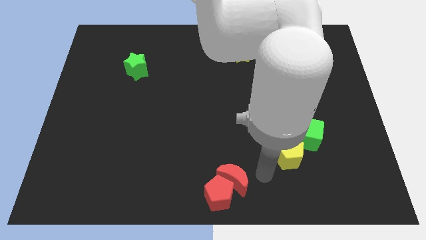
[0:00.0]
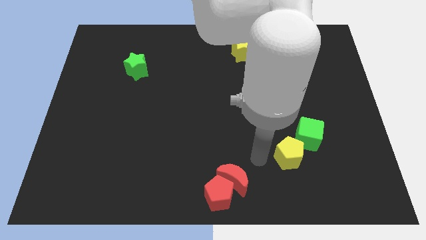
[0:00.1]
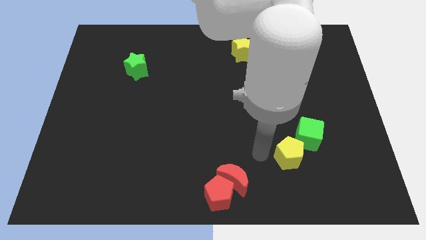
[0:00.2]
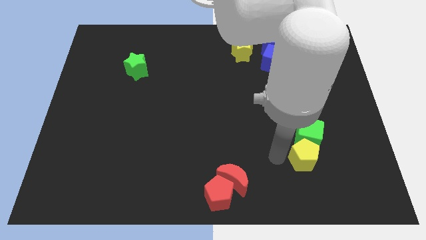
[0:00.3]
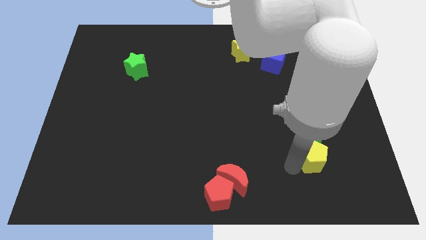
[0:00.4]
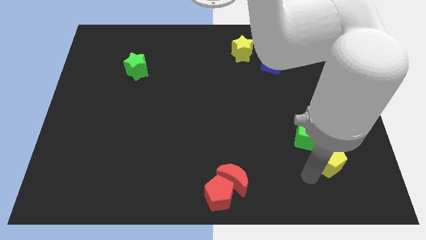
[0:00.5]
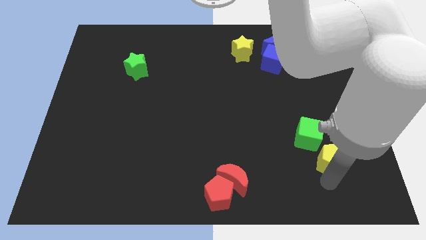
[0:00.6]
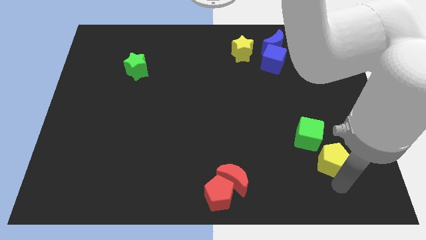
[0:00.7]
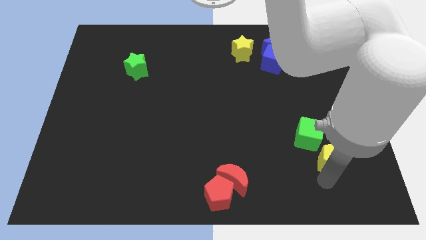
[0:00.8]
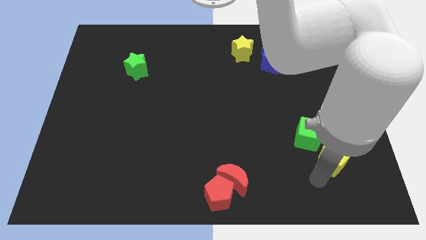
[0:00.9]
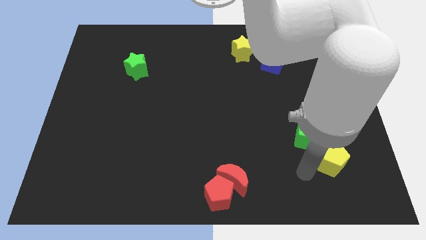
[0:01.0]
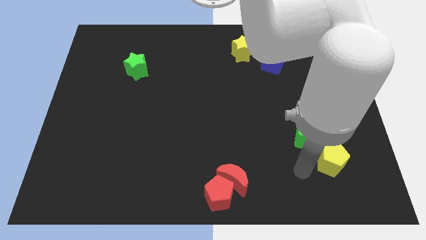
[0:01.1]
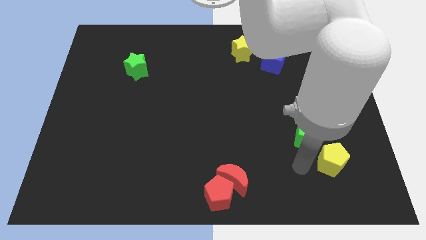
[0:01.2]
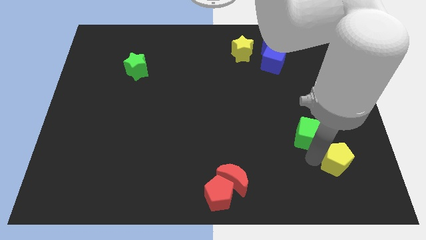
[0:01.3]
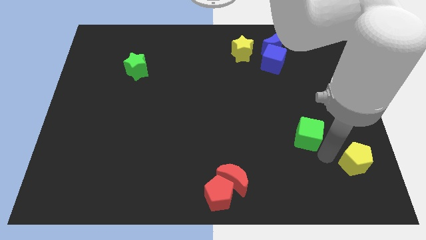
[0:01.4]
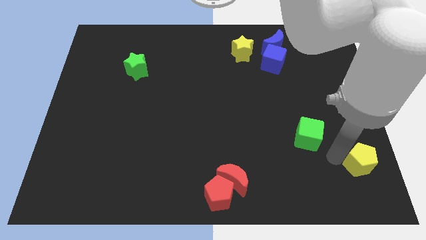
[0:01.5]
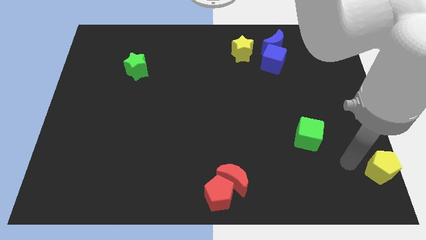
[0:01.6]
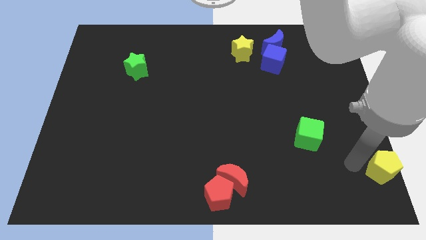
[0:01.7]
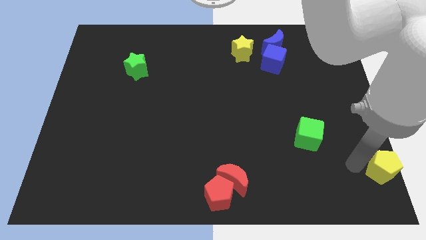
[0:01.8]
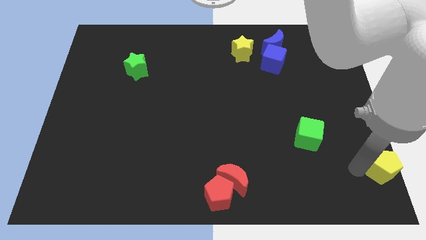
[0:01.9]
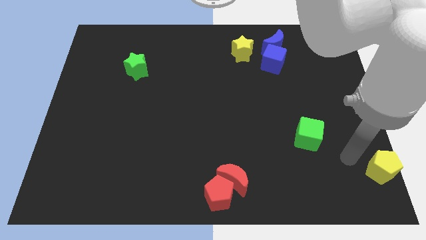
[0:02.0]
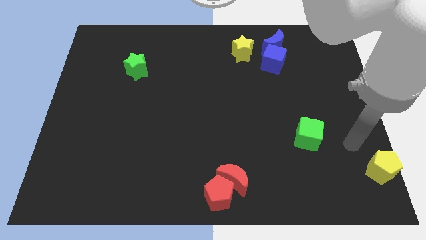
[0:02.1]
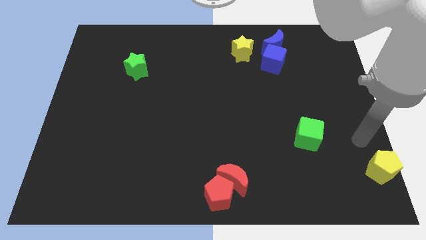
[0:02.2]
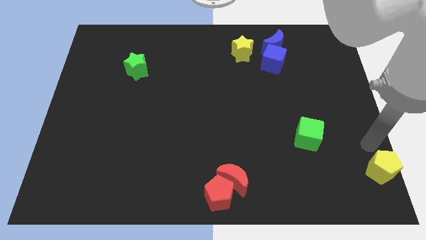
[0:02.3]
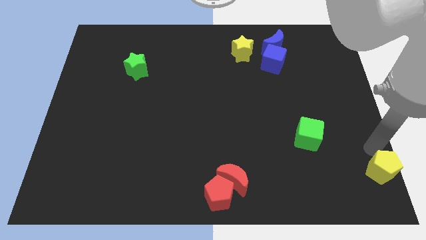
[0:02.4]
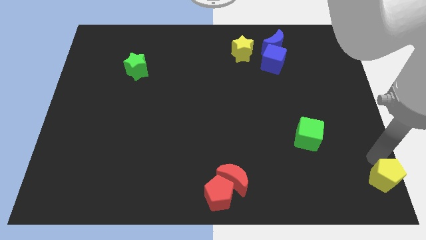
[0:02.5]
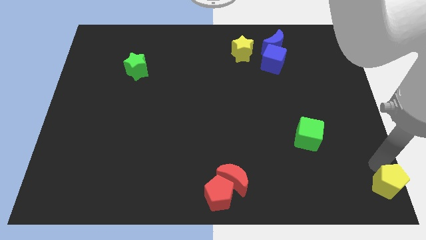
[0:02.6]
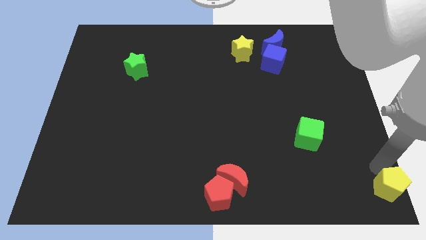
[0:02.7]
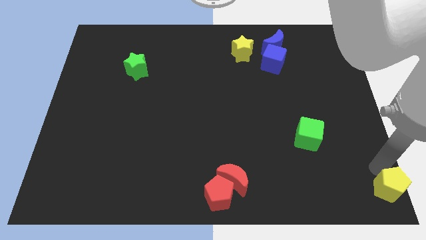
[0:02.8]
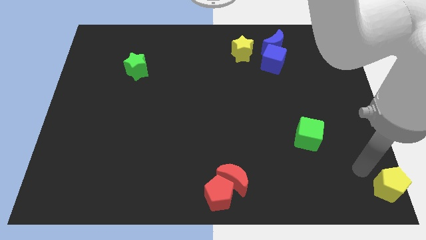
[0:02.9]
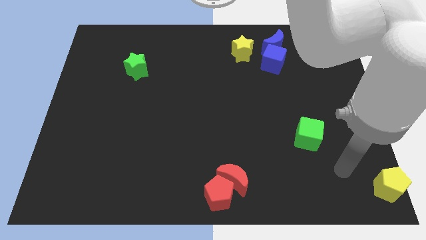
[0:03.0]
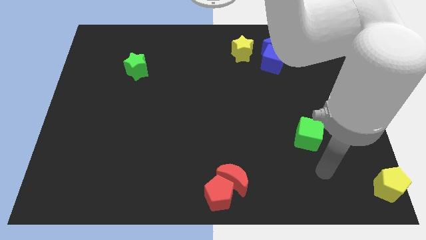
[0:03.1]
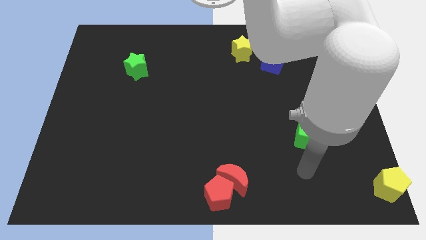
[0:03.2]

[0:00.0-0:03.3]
place the yellow pentagon to the bottom right of the board

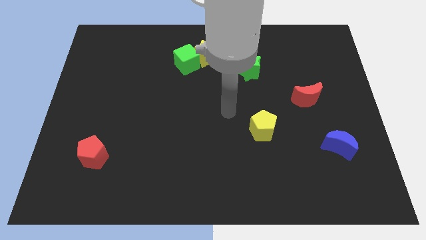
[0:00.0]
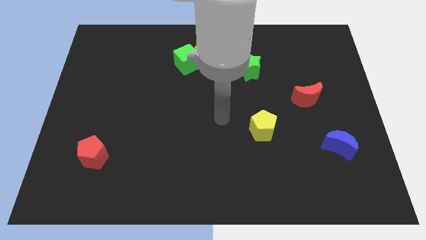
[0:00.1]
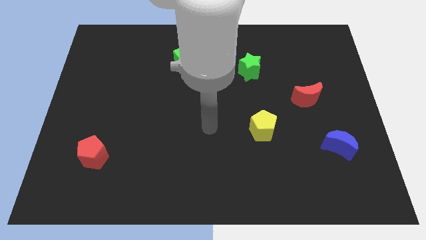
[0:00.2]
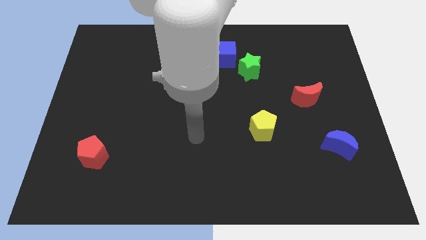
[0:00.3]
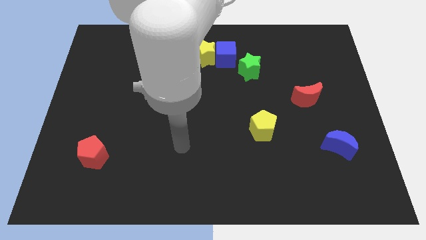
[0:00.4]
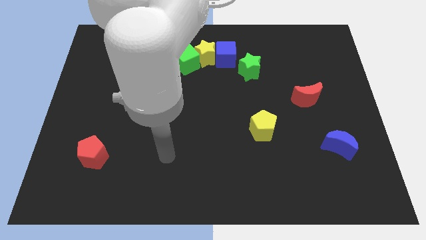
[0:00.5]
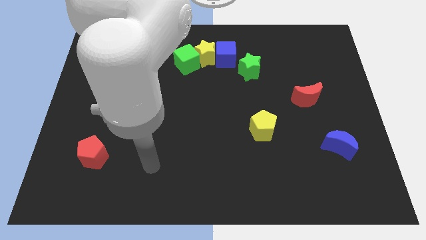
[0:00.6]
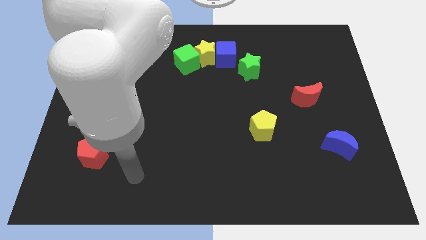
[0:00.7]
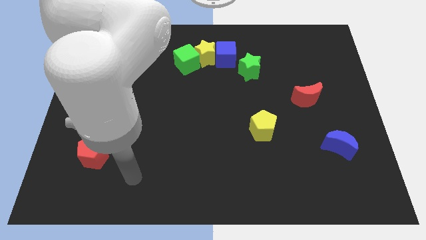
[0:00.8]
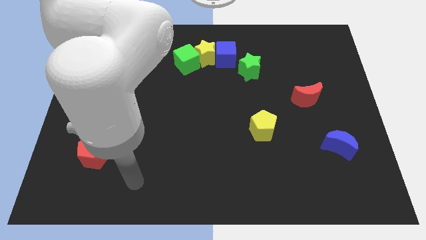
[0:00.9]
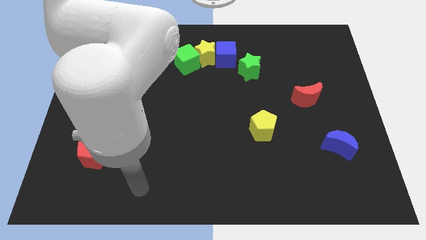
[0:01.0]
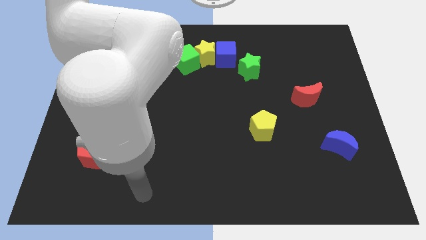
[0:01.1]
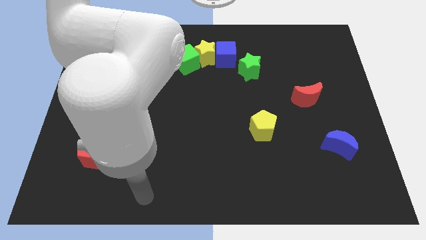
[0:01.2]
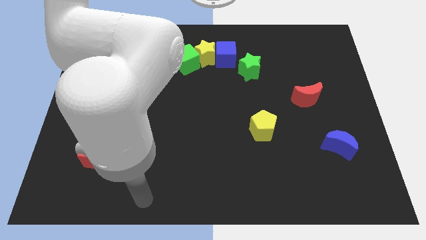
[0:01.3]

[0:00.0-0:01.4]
move your hand to the bottom side

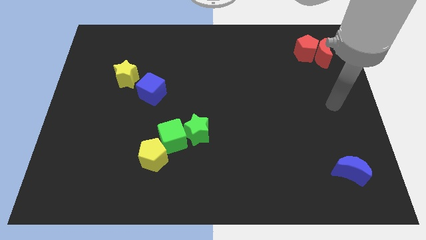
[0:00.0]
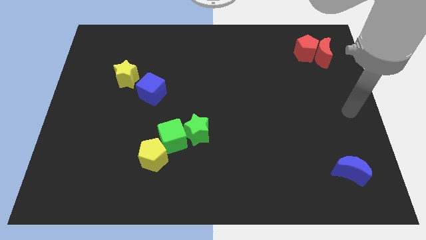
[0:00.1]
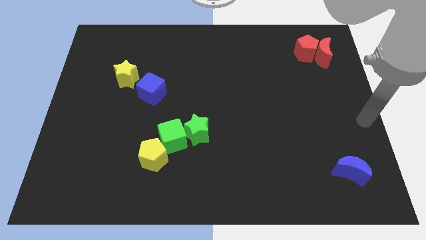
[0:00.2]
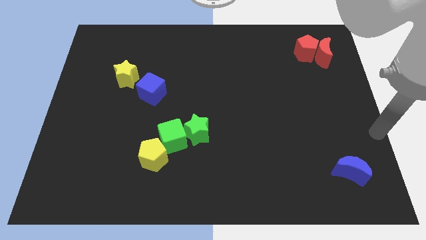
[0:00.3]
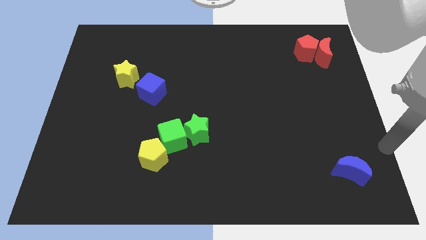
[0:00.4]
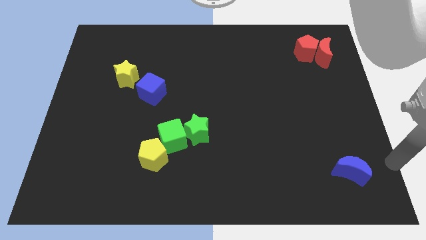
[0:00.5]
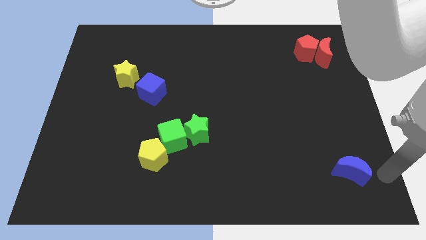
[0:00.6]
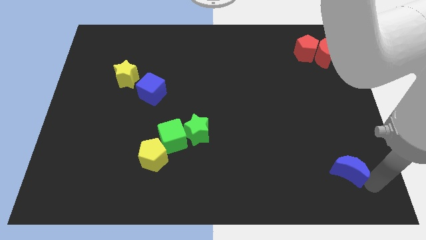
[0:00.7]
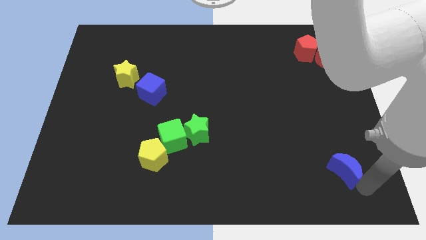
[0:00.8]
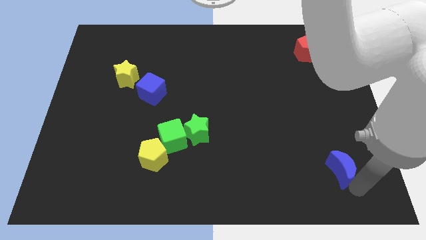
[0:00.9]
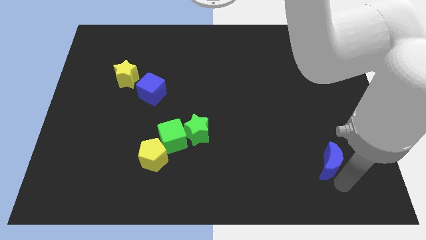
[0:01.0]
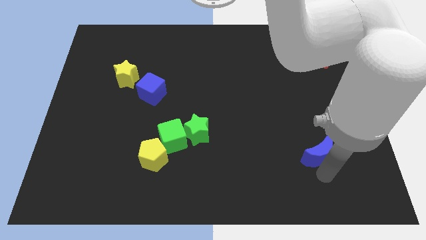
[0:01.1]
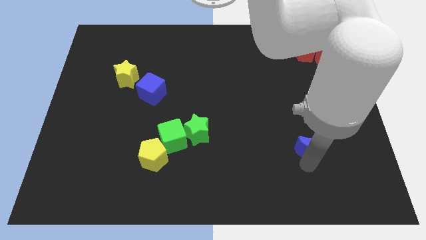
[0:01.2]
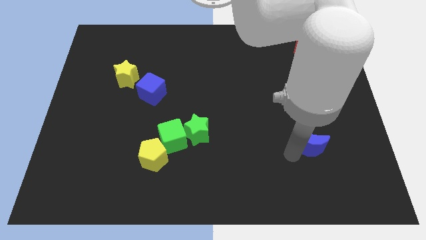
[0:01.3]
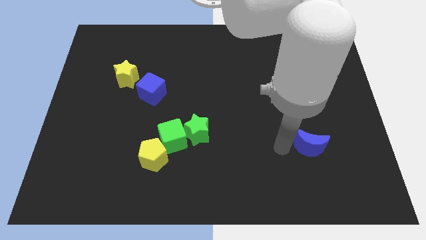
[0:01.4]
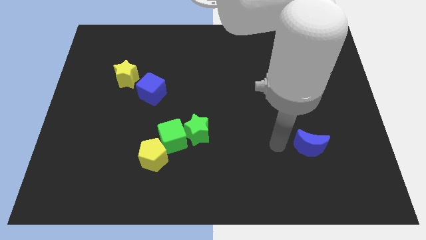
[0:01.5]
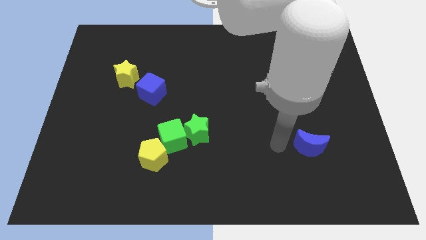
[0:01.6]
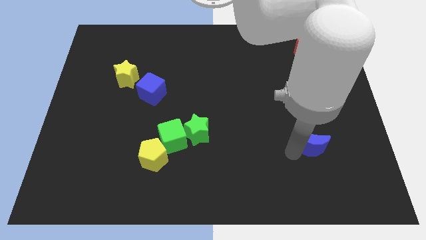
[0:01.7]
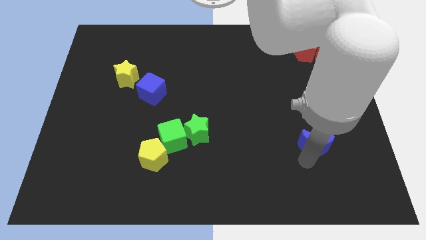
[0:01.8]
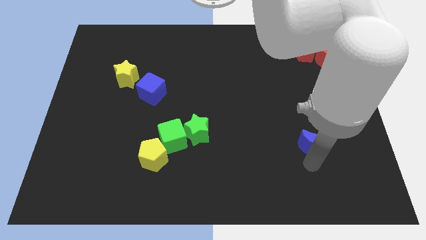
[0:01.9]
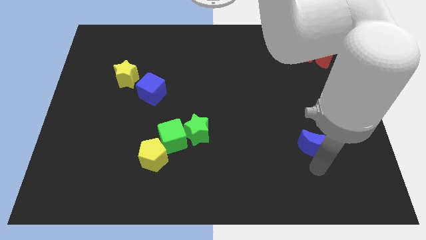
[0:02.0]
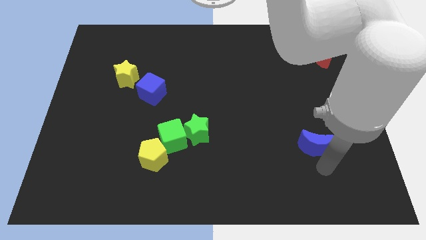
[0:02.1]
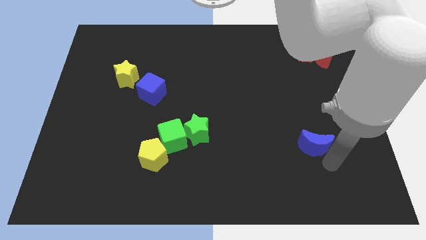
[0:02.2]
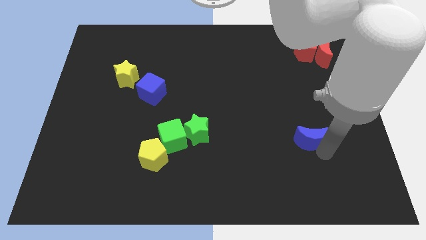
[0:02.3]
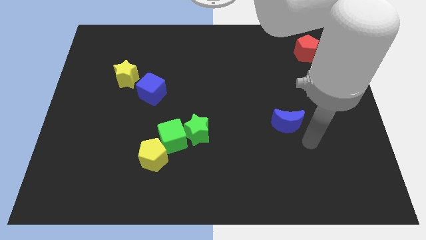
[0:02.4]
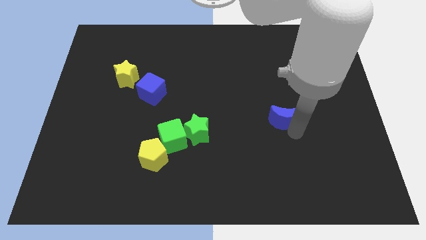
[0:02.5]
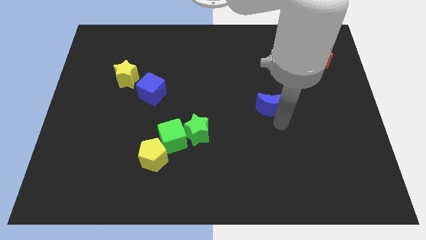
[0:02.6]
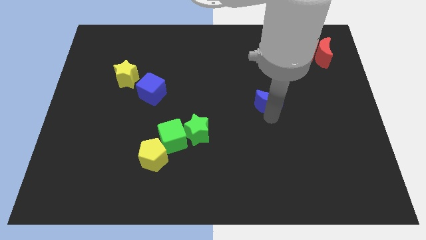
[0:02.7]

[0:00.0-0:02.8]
place the blue moon below the red pentagon

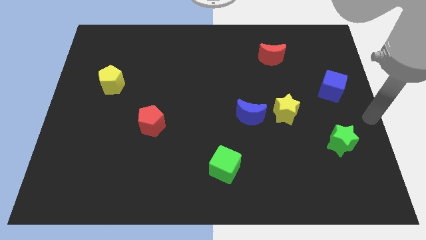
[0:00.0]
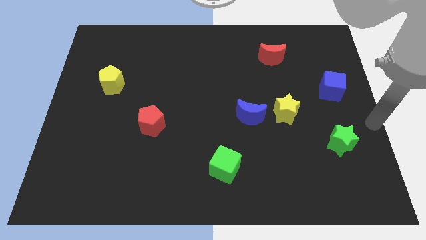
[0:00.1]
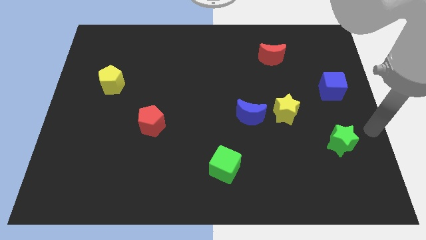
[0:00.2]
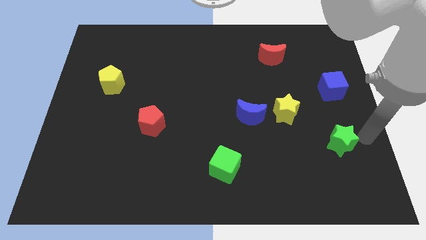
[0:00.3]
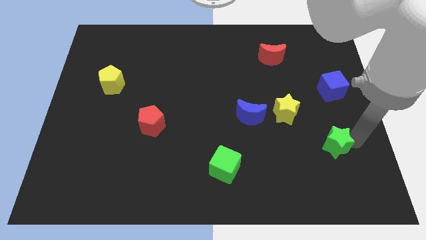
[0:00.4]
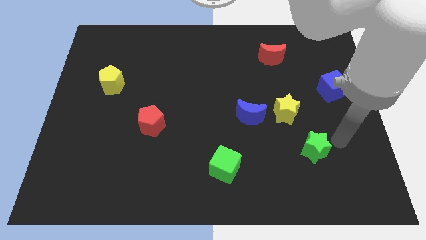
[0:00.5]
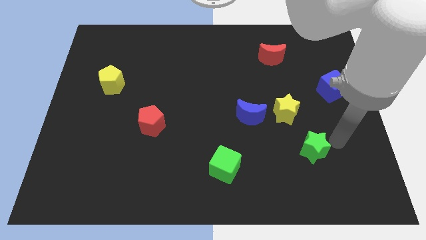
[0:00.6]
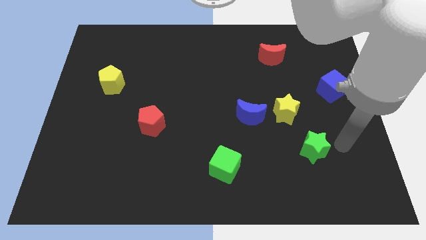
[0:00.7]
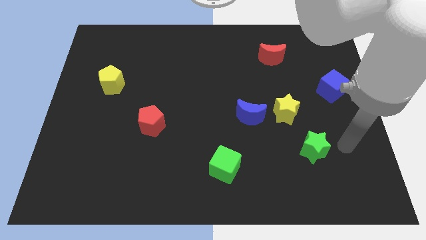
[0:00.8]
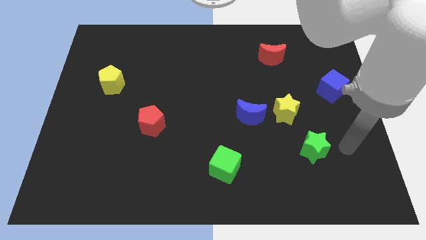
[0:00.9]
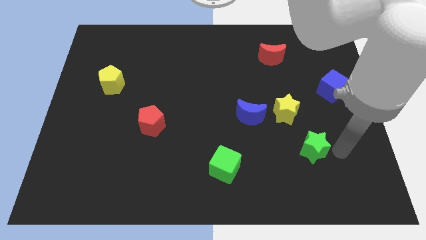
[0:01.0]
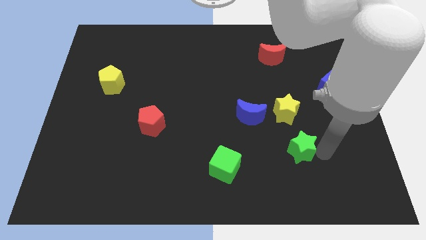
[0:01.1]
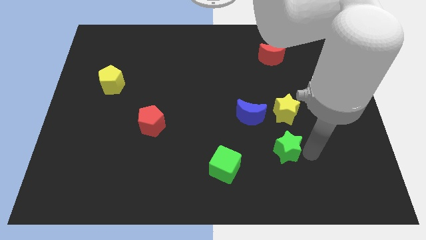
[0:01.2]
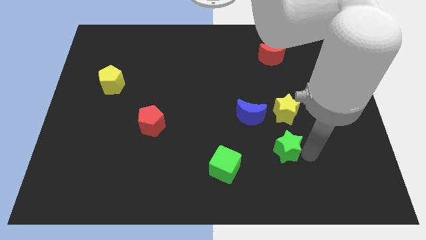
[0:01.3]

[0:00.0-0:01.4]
place the green star below the yellow star

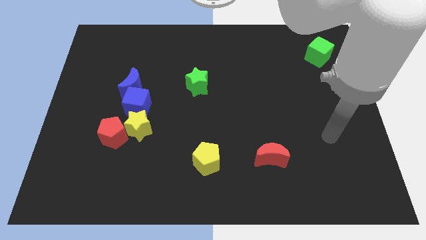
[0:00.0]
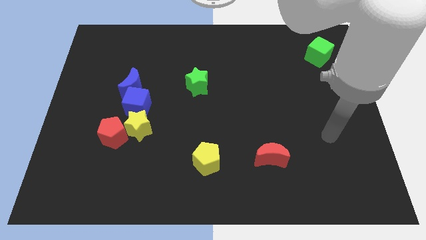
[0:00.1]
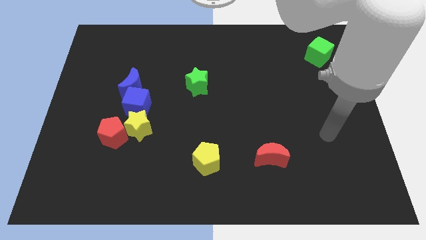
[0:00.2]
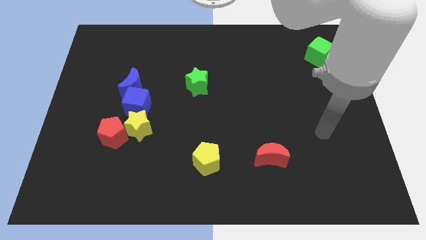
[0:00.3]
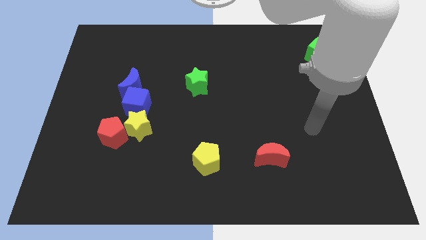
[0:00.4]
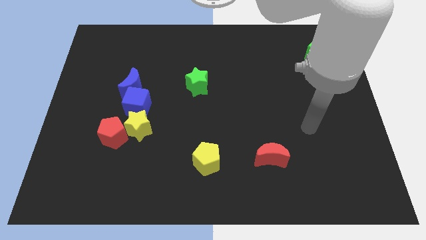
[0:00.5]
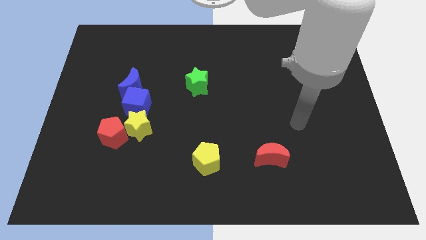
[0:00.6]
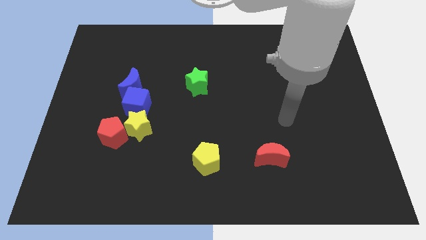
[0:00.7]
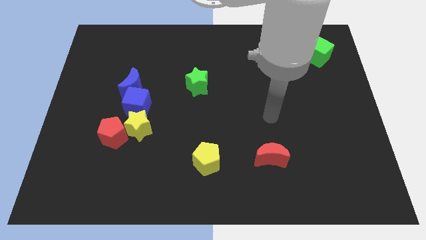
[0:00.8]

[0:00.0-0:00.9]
place the arm above the red moon
